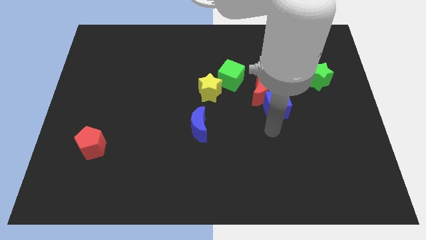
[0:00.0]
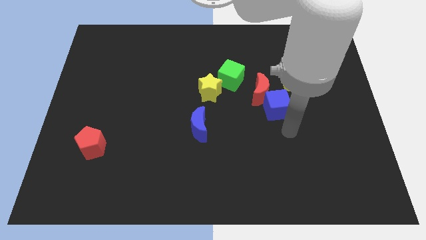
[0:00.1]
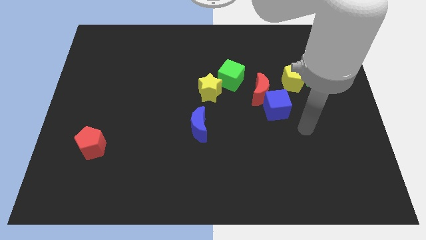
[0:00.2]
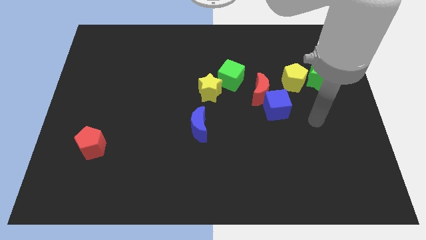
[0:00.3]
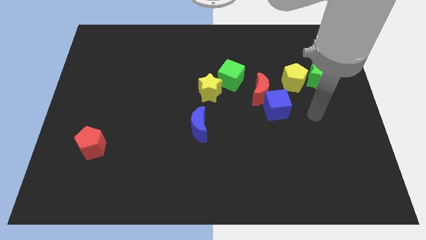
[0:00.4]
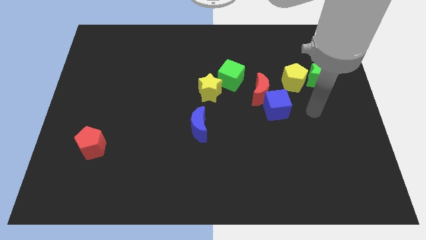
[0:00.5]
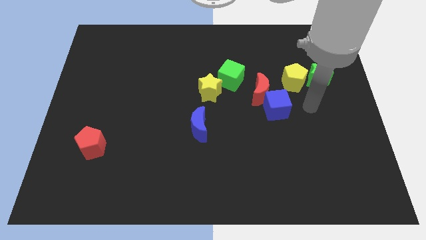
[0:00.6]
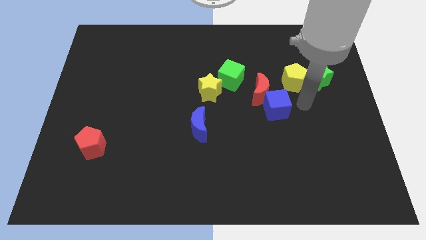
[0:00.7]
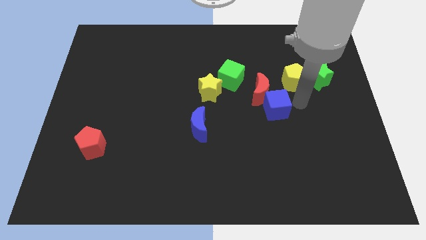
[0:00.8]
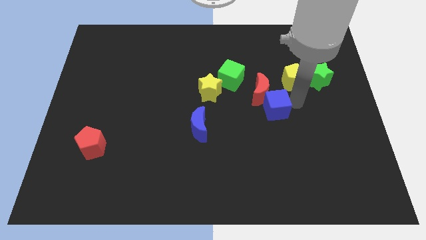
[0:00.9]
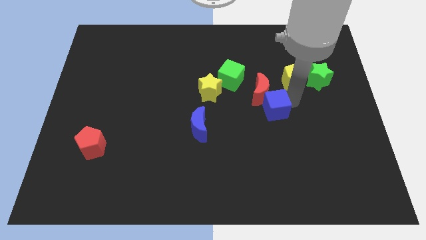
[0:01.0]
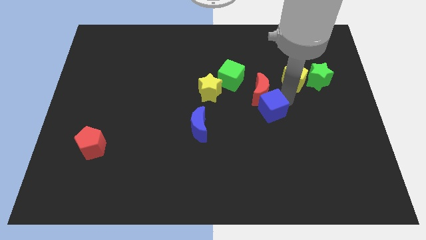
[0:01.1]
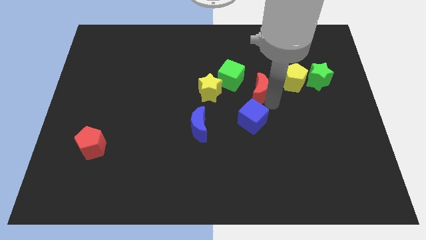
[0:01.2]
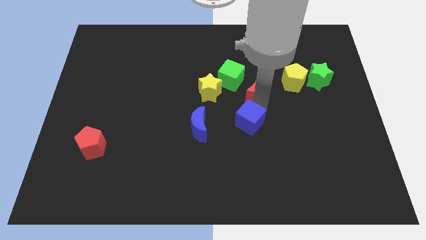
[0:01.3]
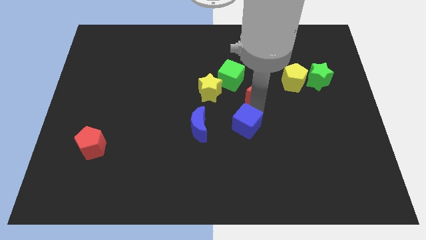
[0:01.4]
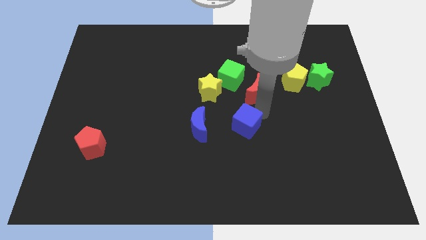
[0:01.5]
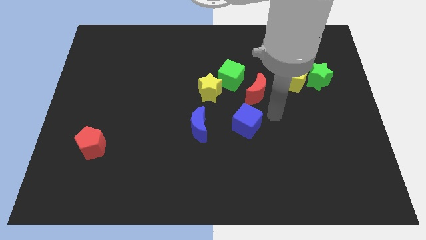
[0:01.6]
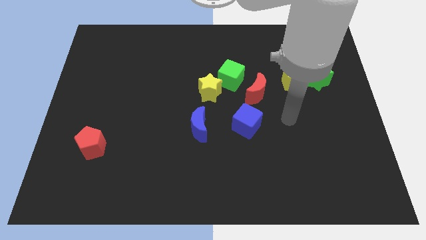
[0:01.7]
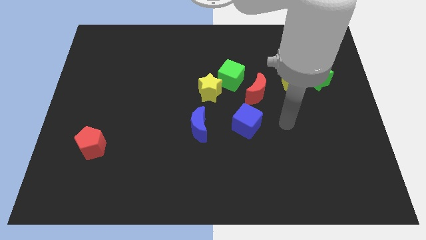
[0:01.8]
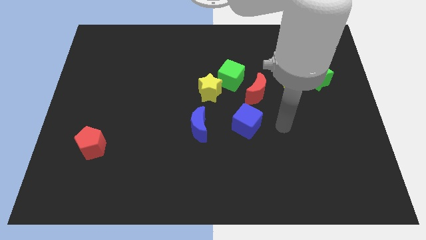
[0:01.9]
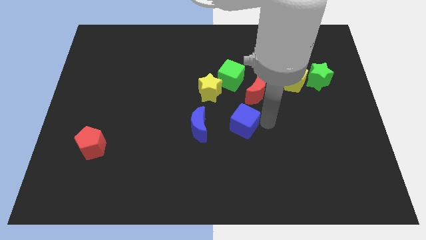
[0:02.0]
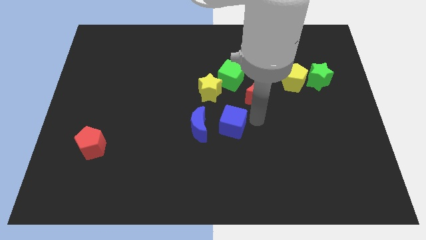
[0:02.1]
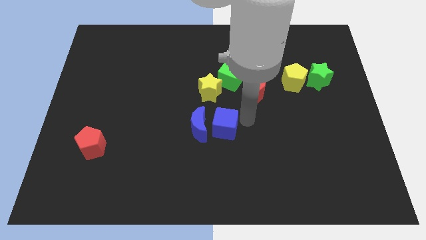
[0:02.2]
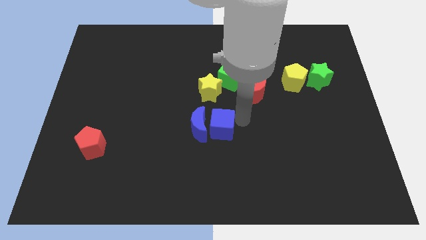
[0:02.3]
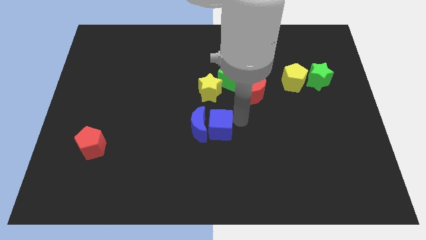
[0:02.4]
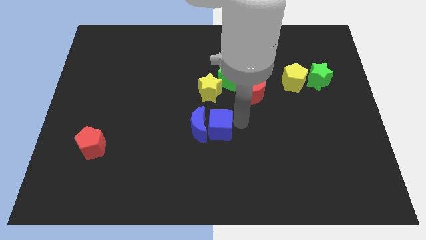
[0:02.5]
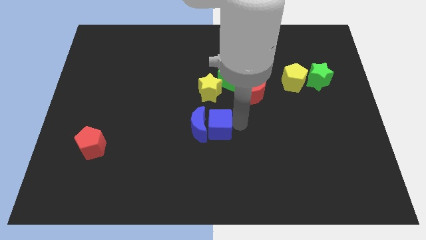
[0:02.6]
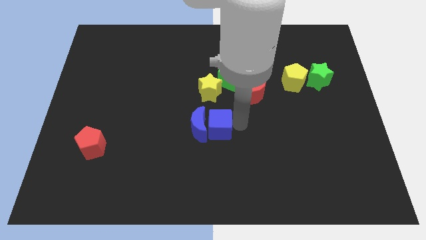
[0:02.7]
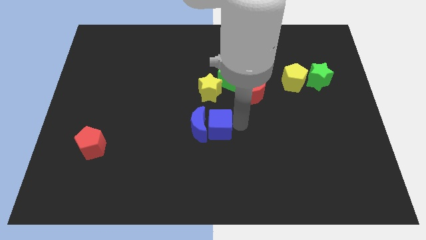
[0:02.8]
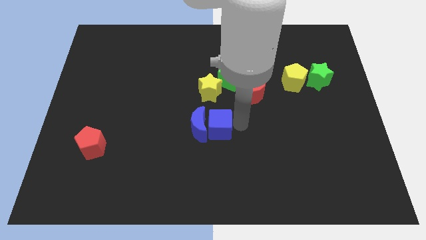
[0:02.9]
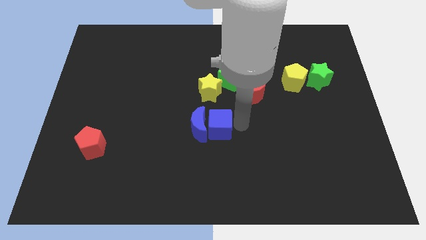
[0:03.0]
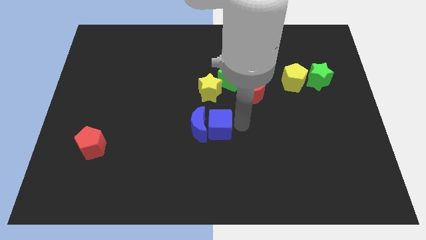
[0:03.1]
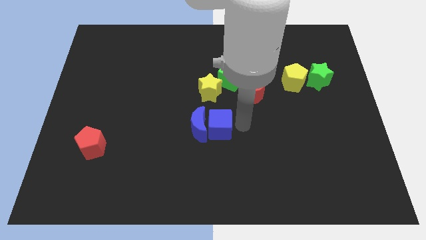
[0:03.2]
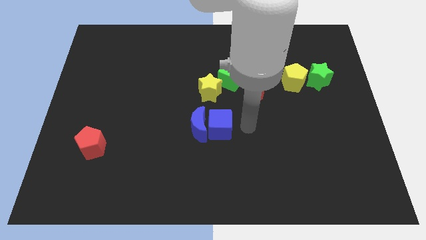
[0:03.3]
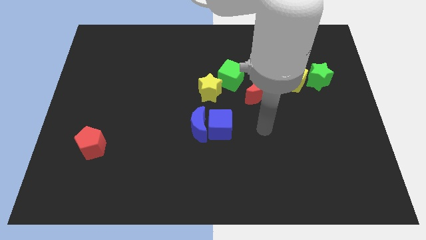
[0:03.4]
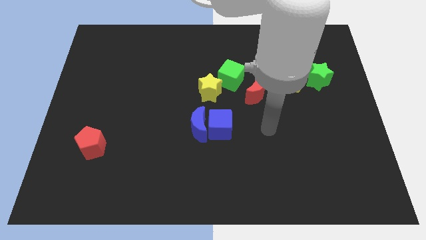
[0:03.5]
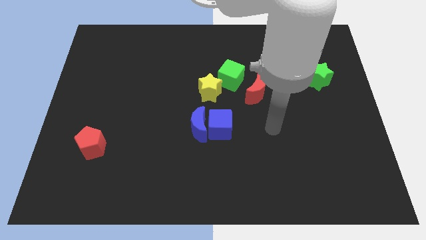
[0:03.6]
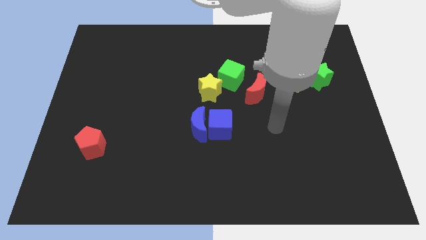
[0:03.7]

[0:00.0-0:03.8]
push the blue cube towards the right side of the blue crescent

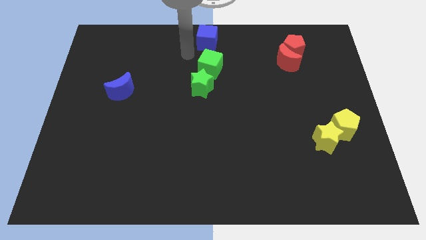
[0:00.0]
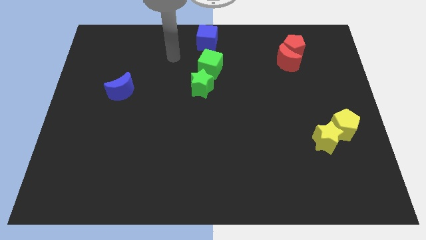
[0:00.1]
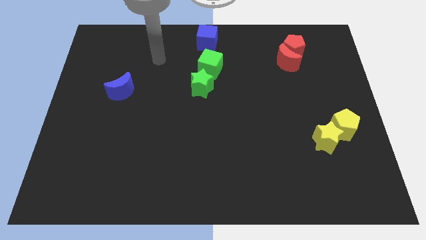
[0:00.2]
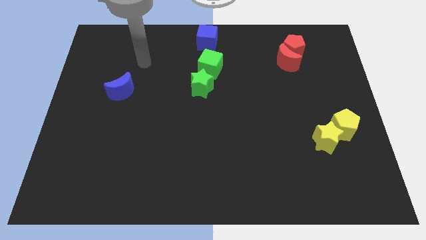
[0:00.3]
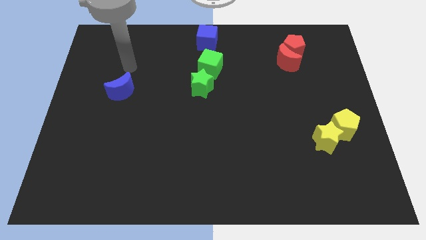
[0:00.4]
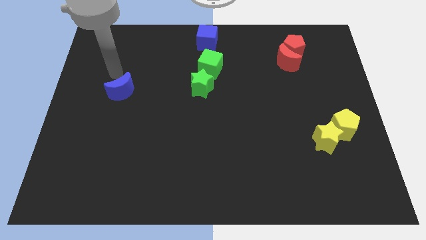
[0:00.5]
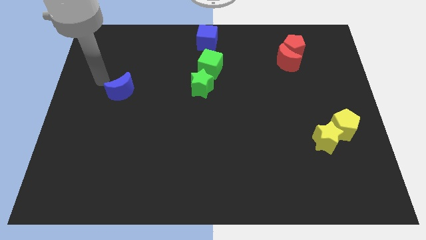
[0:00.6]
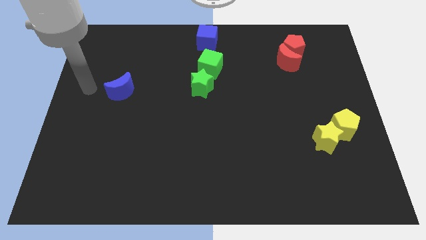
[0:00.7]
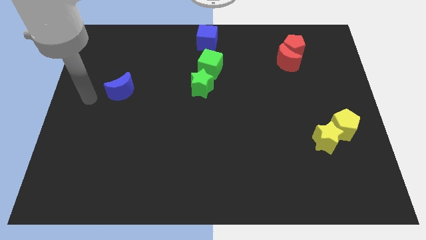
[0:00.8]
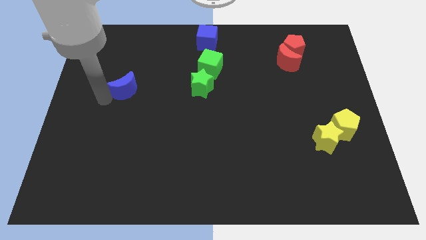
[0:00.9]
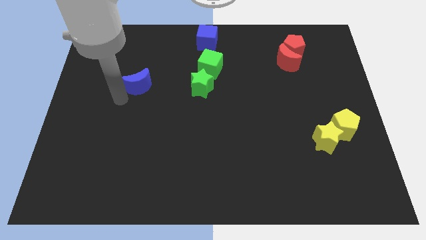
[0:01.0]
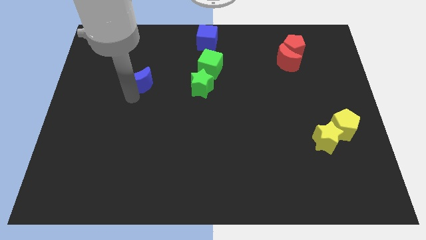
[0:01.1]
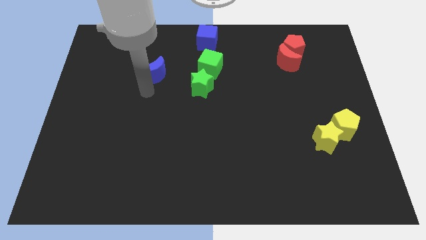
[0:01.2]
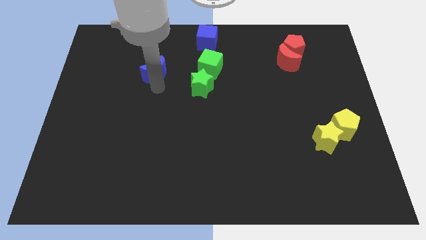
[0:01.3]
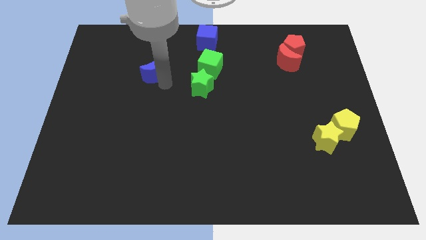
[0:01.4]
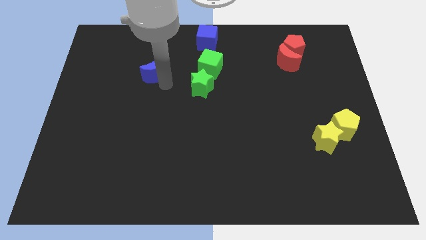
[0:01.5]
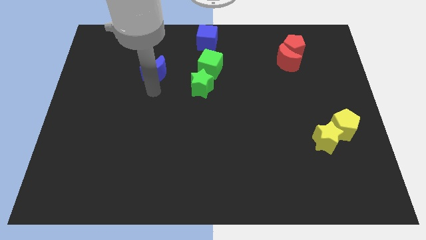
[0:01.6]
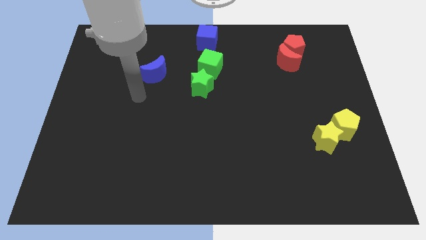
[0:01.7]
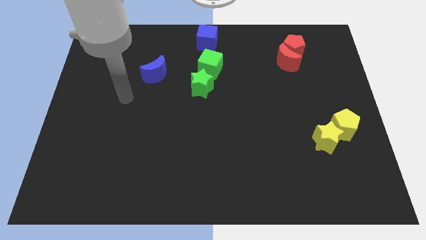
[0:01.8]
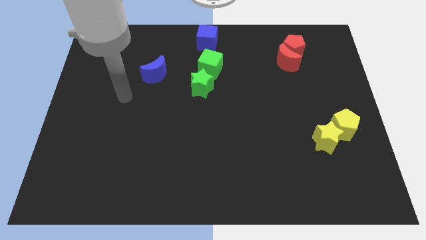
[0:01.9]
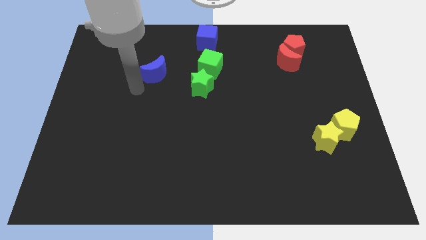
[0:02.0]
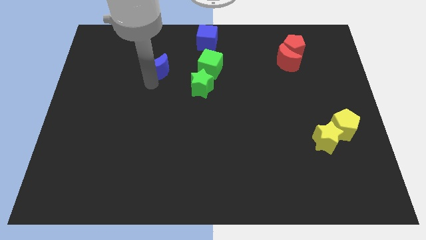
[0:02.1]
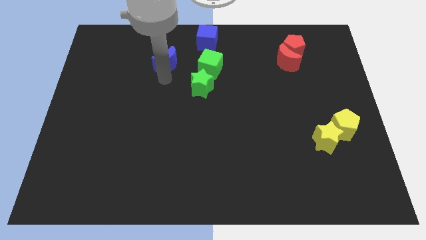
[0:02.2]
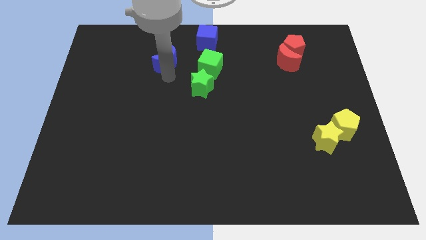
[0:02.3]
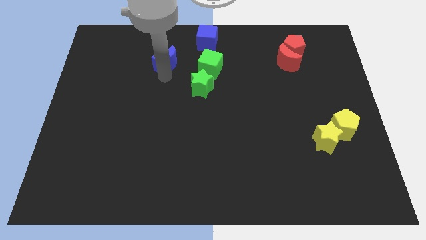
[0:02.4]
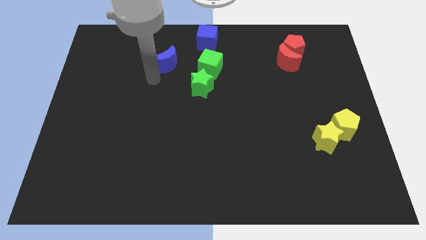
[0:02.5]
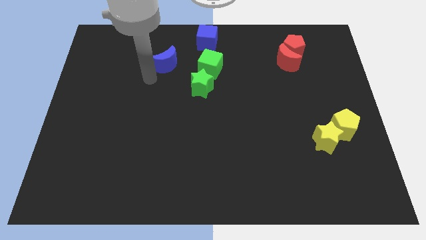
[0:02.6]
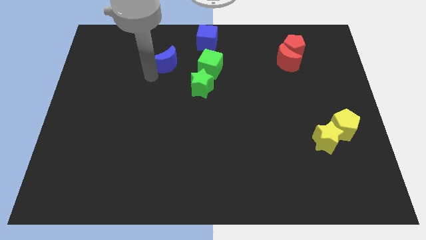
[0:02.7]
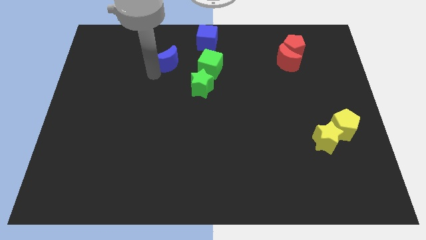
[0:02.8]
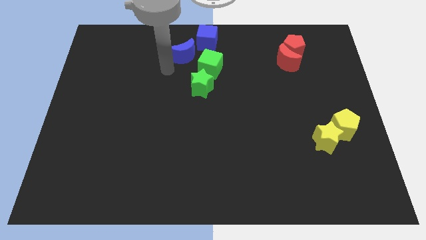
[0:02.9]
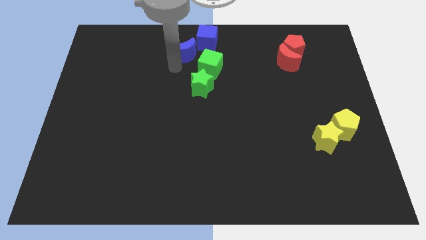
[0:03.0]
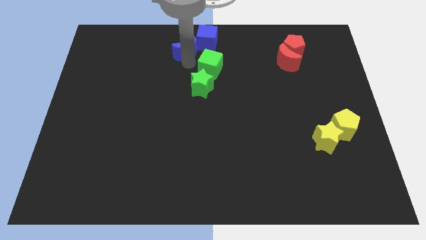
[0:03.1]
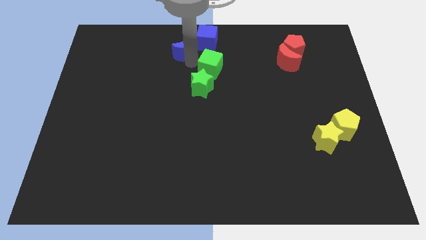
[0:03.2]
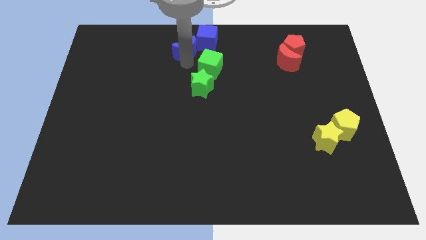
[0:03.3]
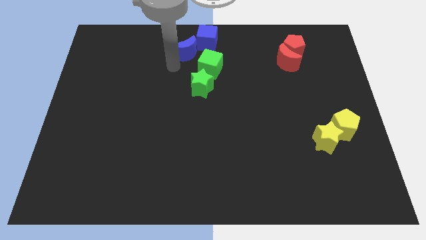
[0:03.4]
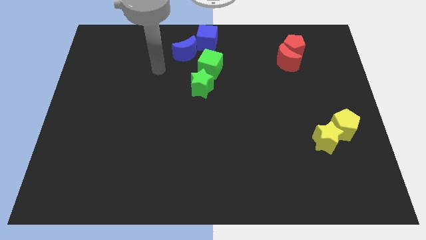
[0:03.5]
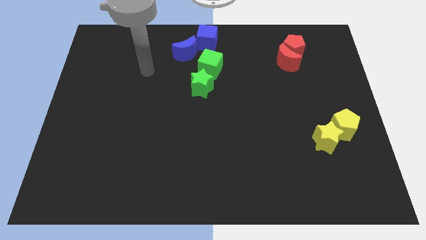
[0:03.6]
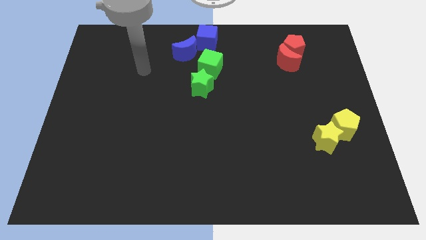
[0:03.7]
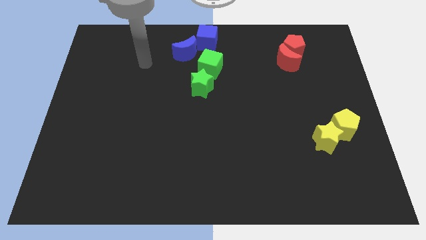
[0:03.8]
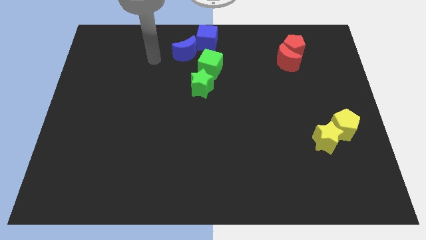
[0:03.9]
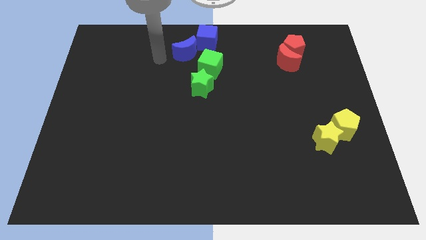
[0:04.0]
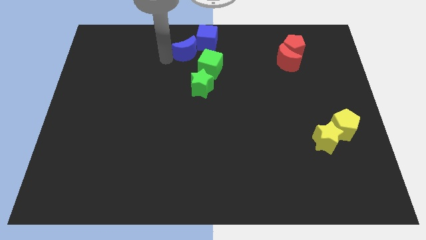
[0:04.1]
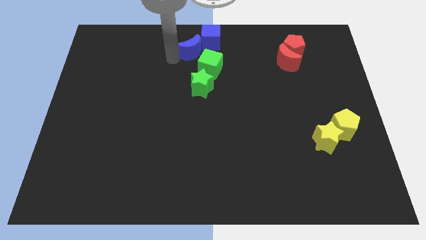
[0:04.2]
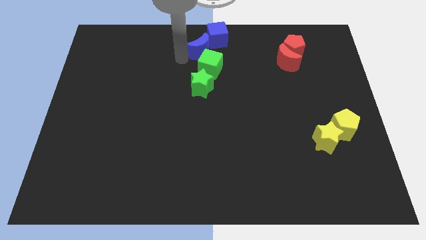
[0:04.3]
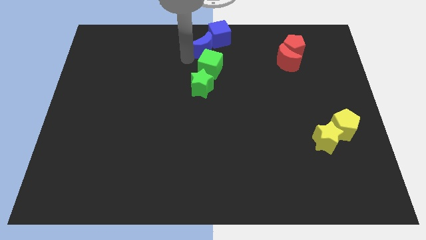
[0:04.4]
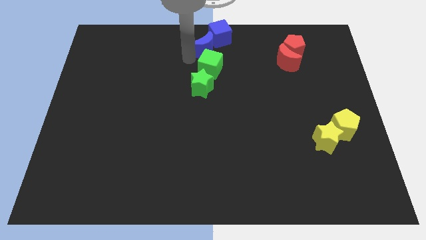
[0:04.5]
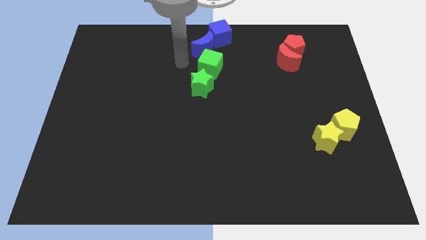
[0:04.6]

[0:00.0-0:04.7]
move the blue crescent into the blue cube

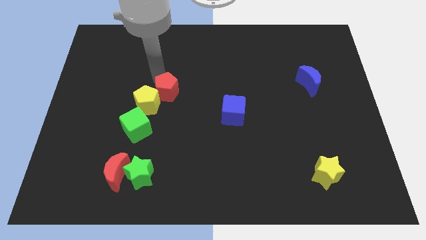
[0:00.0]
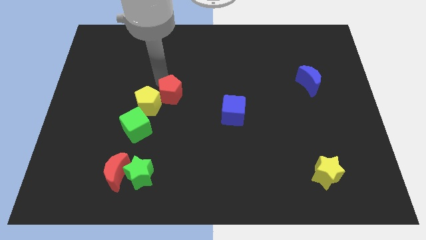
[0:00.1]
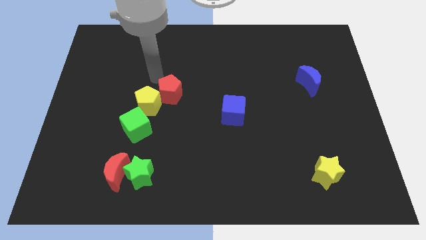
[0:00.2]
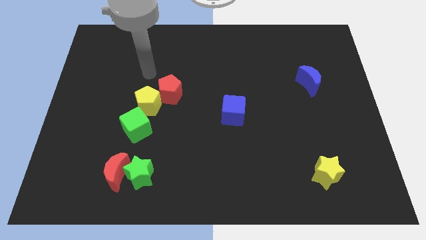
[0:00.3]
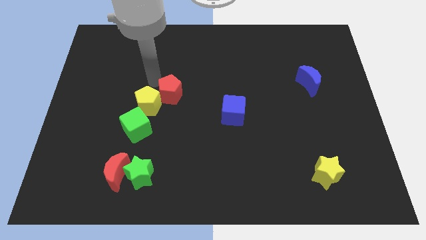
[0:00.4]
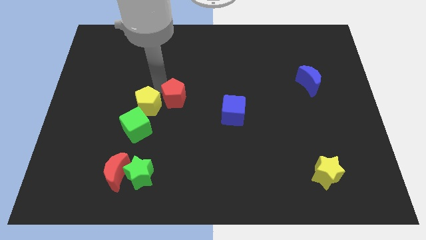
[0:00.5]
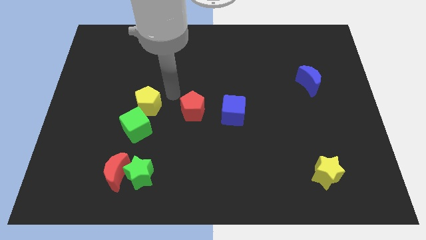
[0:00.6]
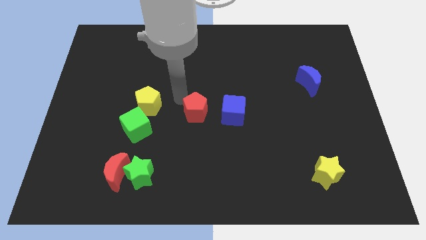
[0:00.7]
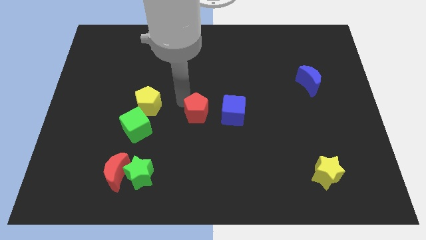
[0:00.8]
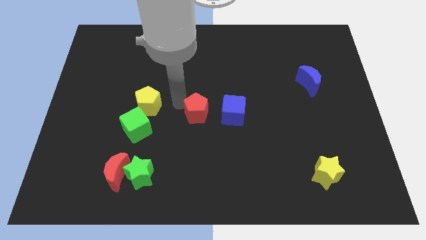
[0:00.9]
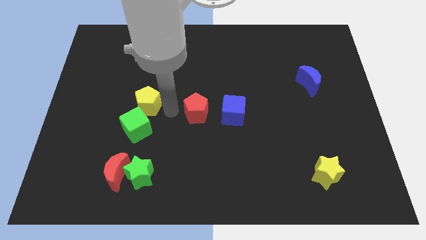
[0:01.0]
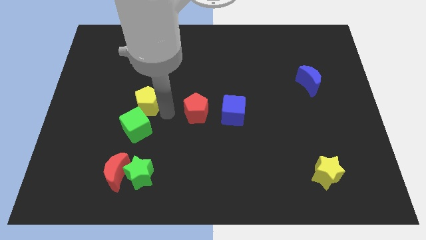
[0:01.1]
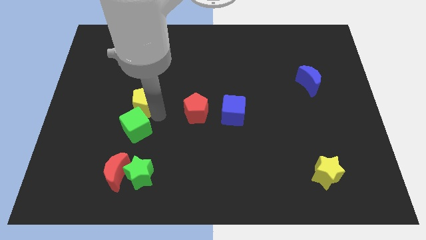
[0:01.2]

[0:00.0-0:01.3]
move the red pentagon away from the yellow pentagon
